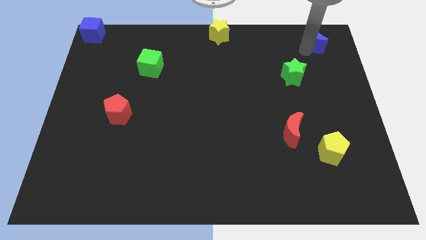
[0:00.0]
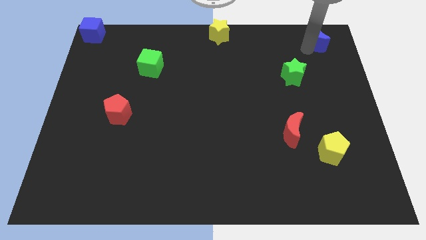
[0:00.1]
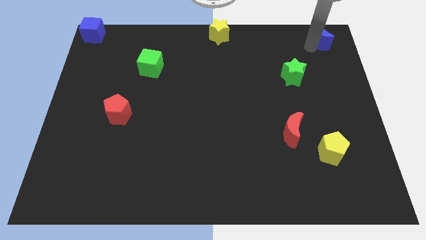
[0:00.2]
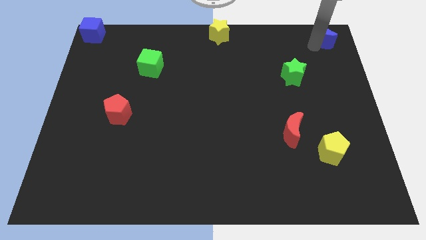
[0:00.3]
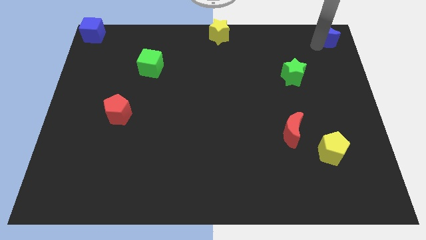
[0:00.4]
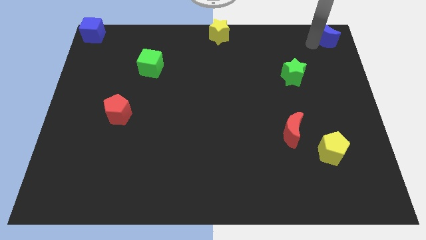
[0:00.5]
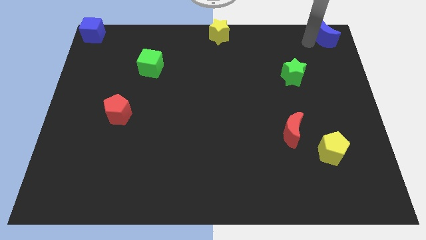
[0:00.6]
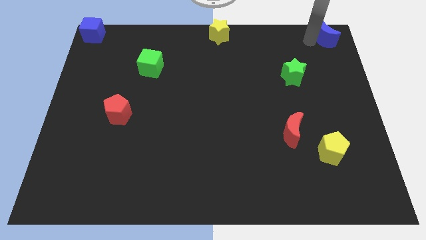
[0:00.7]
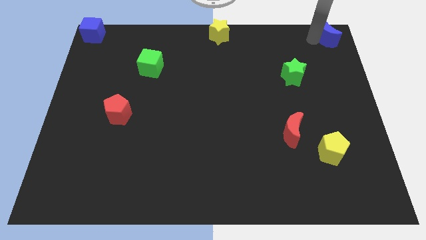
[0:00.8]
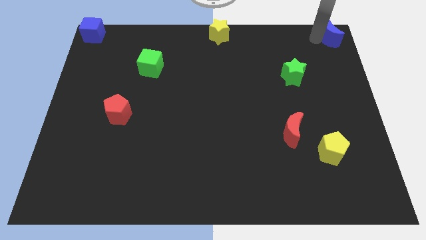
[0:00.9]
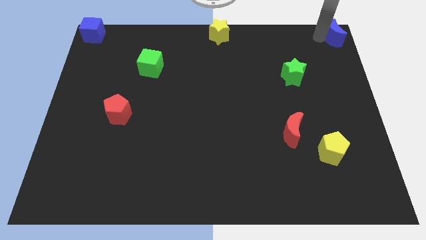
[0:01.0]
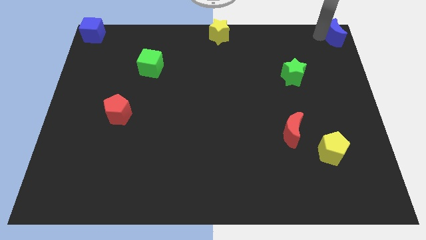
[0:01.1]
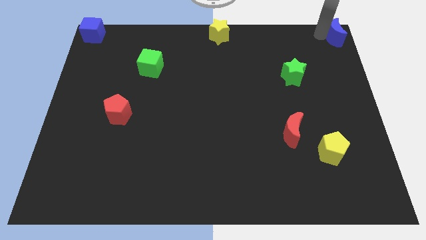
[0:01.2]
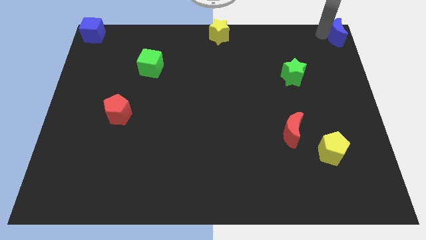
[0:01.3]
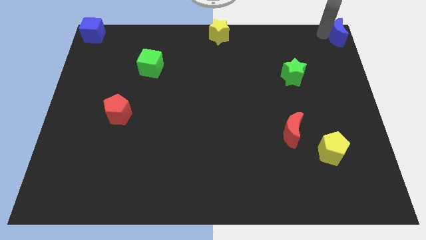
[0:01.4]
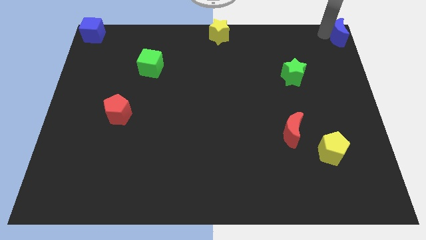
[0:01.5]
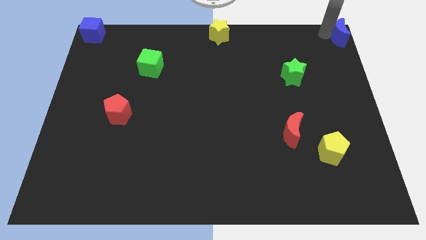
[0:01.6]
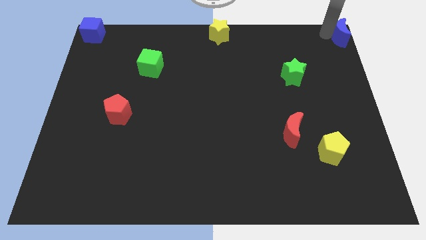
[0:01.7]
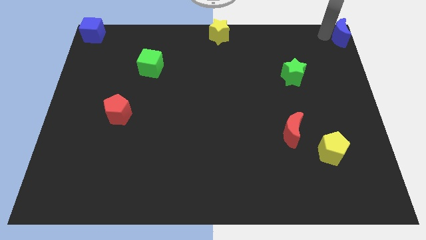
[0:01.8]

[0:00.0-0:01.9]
place the blue crescent at the top right corner of the board

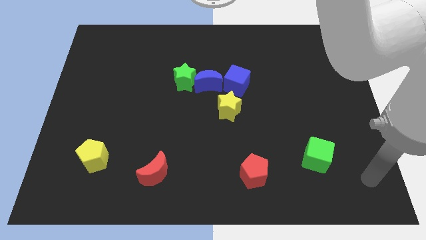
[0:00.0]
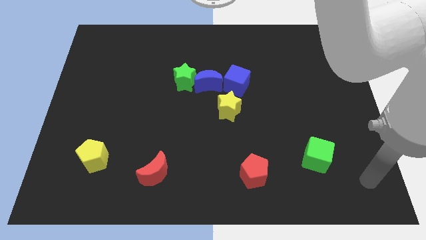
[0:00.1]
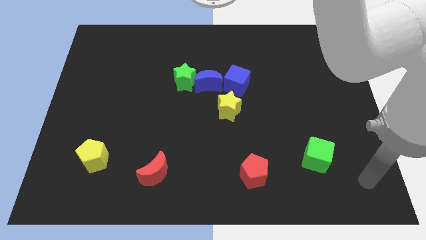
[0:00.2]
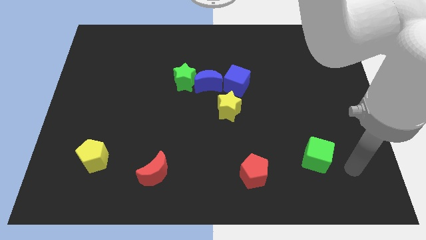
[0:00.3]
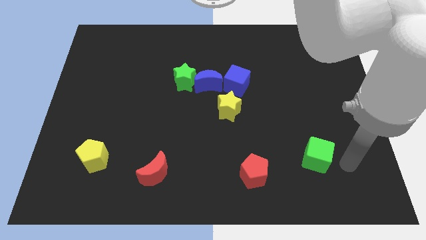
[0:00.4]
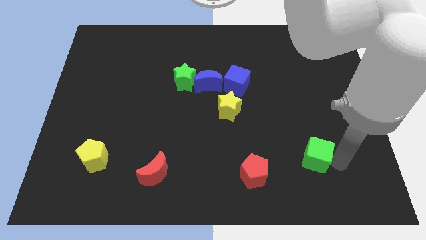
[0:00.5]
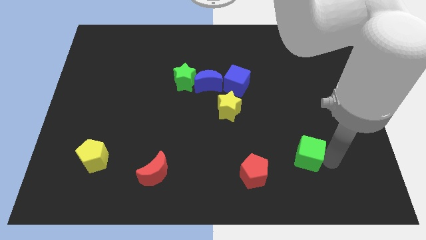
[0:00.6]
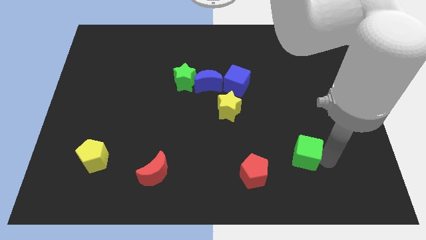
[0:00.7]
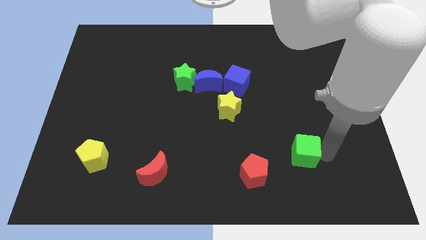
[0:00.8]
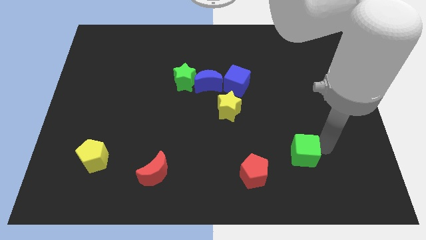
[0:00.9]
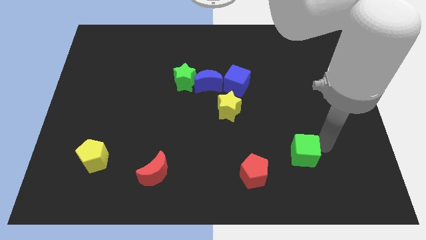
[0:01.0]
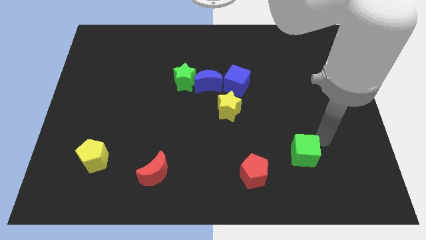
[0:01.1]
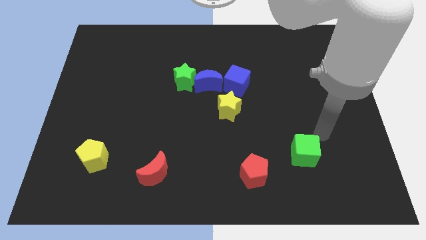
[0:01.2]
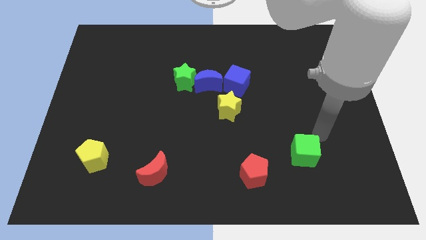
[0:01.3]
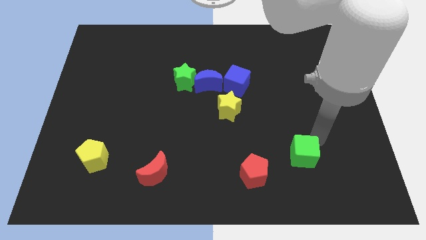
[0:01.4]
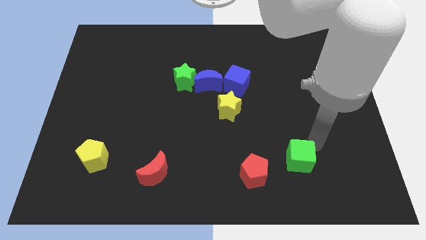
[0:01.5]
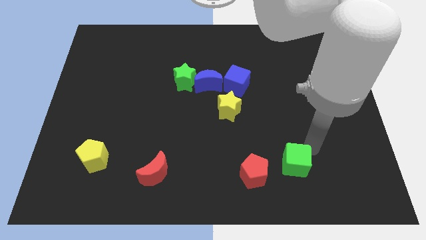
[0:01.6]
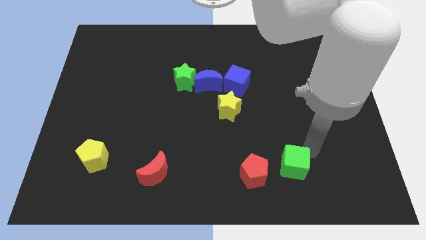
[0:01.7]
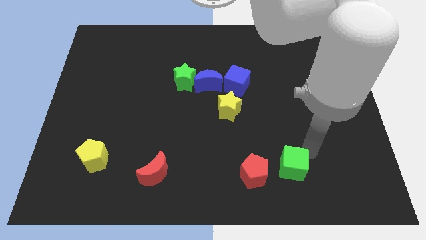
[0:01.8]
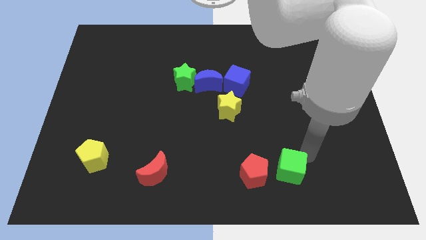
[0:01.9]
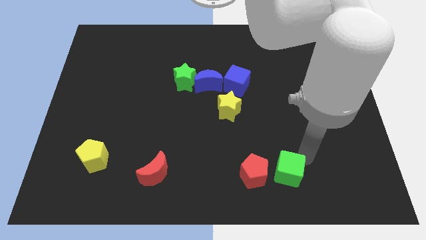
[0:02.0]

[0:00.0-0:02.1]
move the green cube to the right of red pentagon

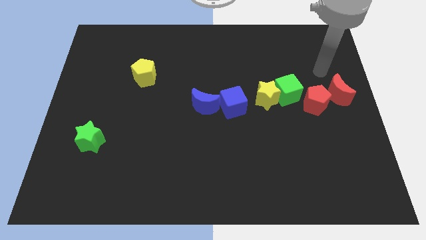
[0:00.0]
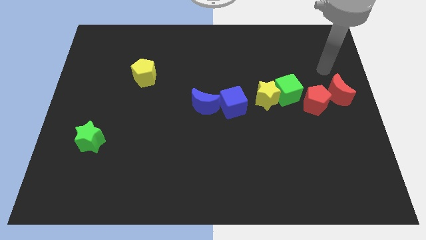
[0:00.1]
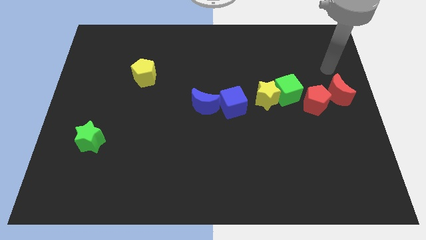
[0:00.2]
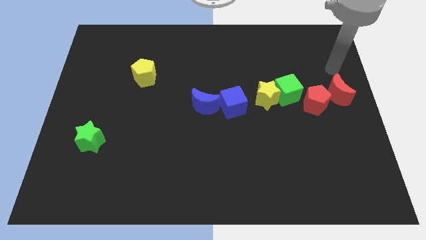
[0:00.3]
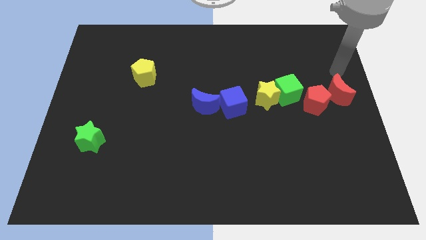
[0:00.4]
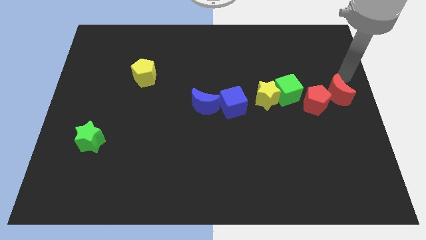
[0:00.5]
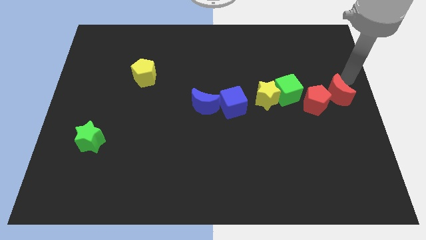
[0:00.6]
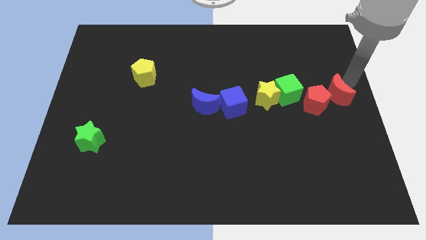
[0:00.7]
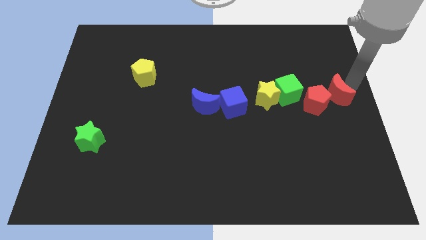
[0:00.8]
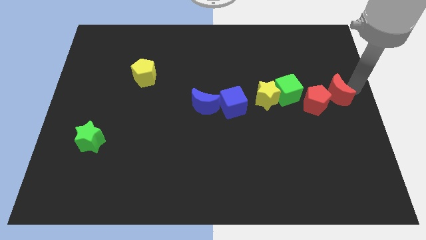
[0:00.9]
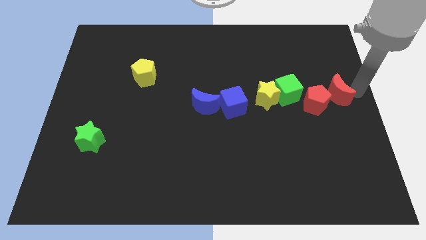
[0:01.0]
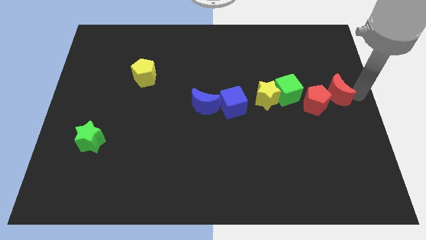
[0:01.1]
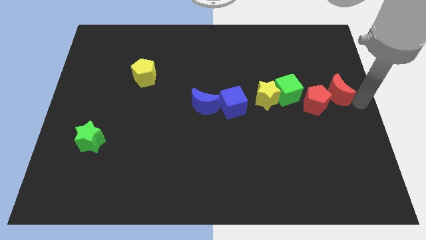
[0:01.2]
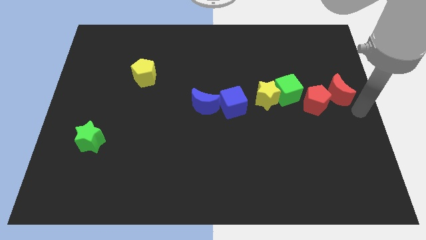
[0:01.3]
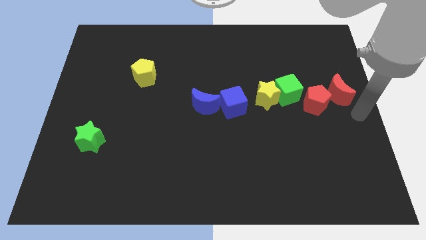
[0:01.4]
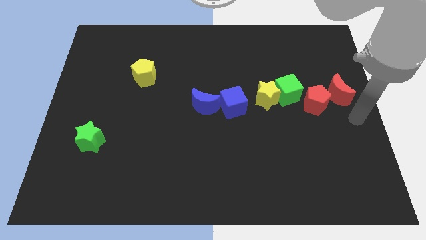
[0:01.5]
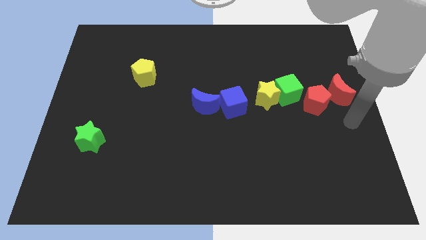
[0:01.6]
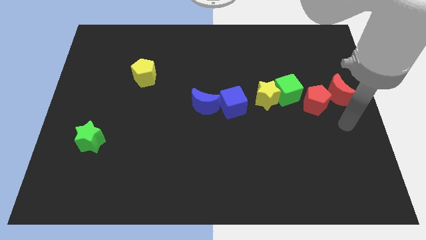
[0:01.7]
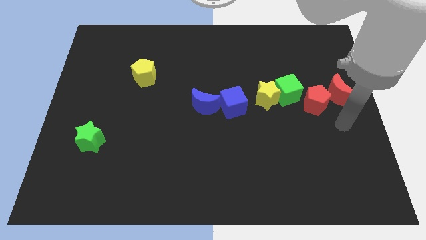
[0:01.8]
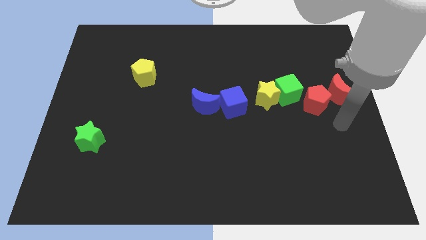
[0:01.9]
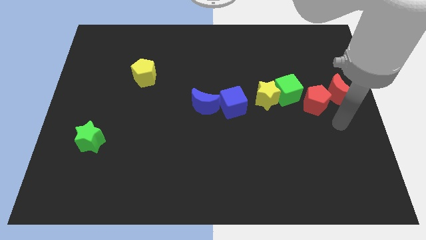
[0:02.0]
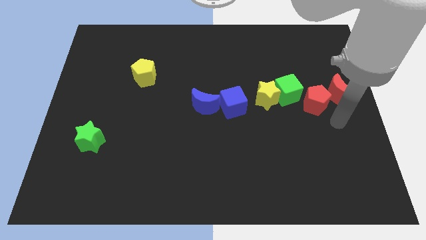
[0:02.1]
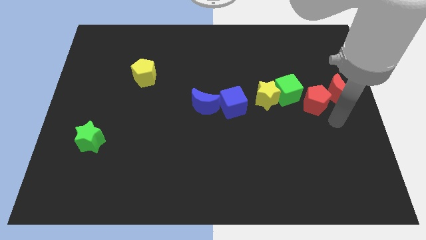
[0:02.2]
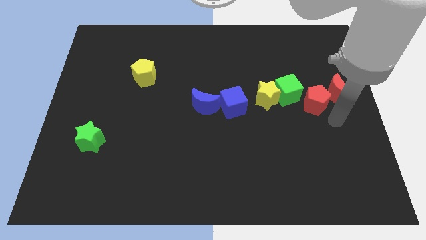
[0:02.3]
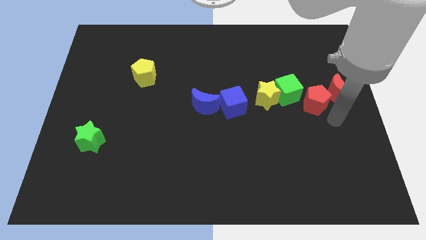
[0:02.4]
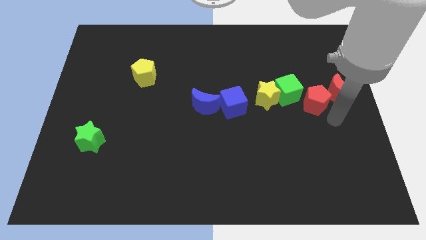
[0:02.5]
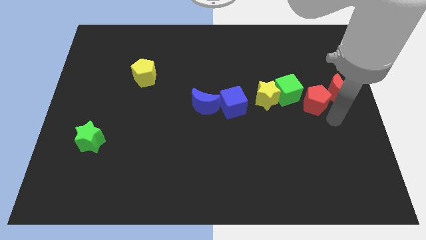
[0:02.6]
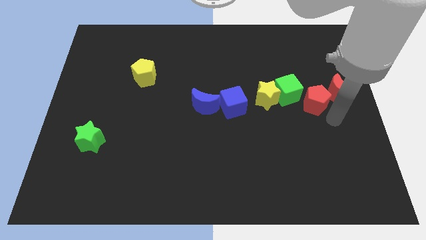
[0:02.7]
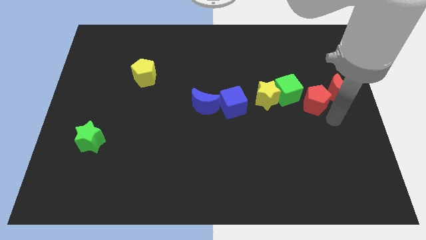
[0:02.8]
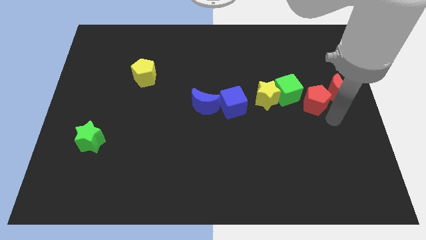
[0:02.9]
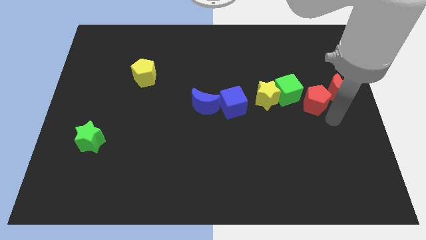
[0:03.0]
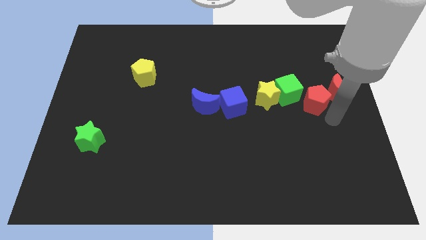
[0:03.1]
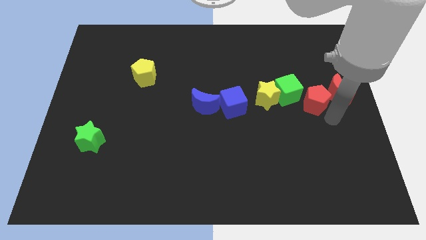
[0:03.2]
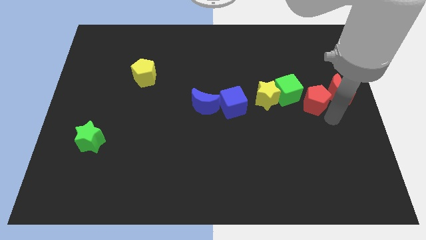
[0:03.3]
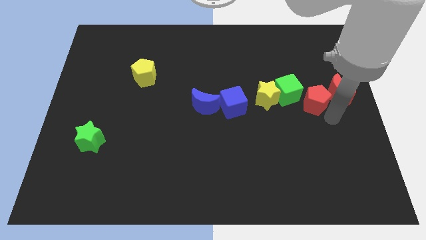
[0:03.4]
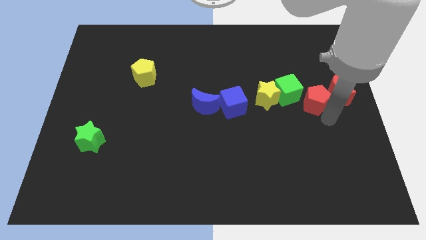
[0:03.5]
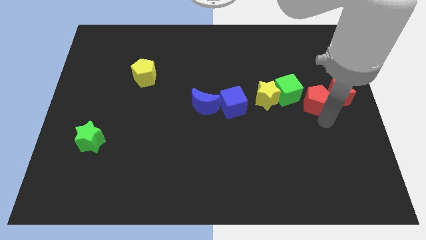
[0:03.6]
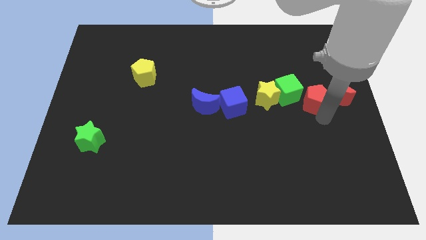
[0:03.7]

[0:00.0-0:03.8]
move your hand to the bottom of the red pentagon

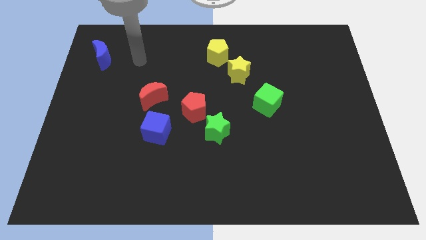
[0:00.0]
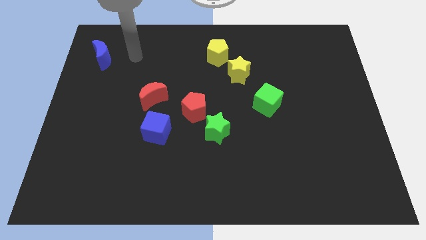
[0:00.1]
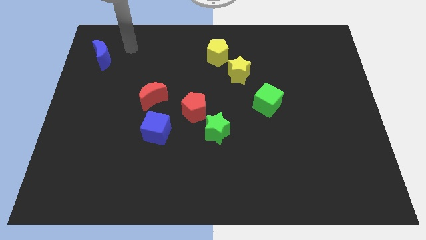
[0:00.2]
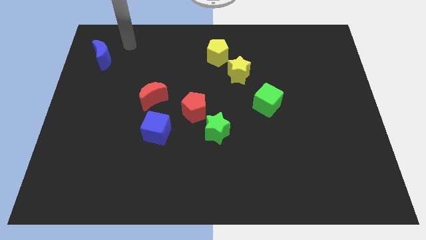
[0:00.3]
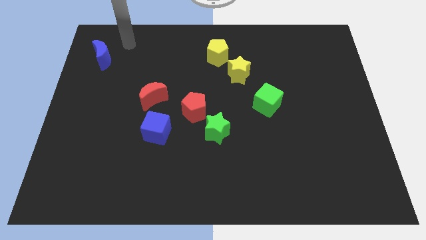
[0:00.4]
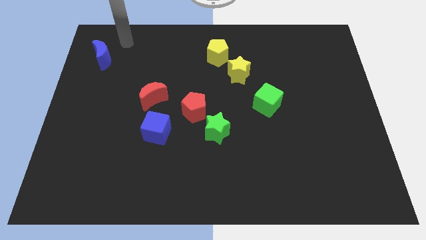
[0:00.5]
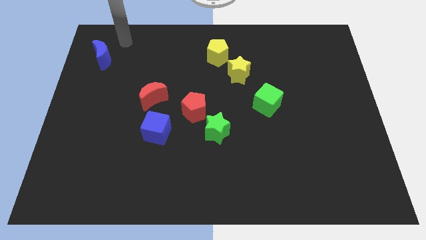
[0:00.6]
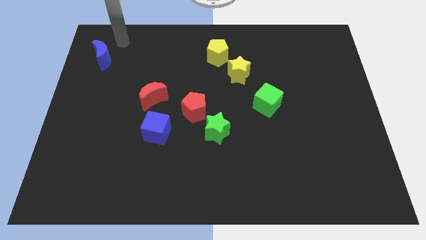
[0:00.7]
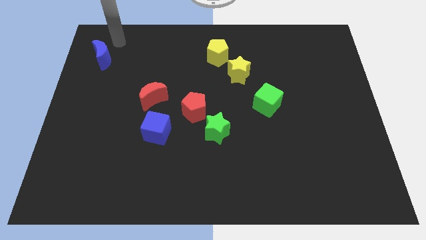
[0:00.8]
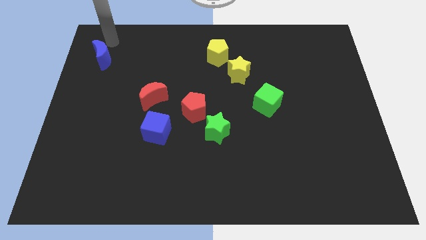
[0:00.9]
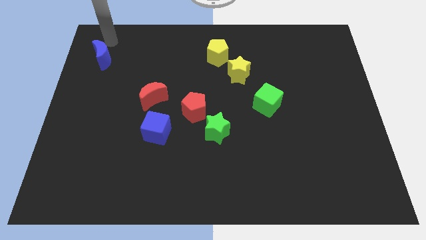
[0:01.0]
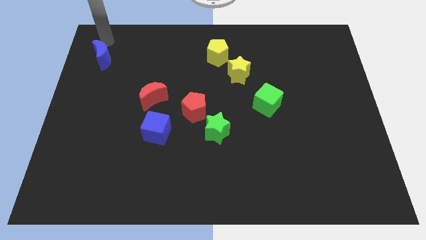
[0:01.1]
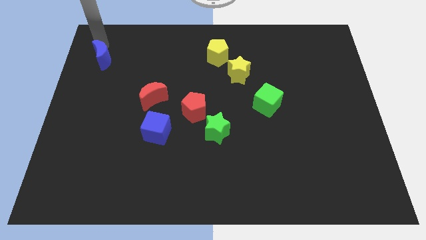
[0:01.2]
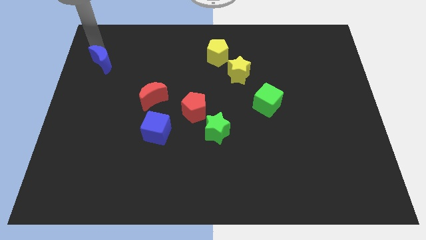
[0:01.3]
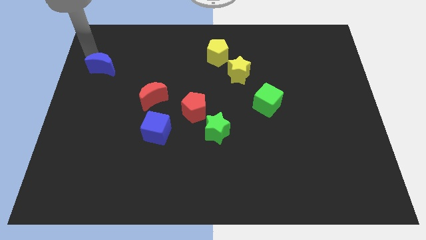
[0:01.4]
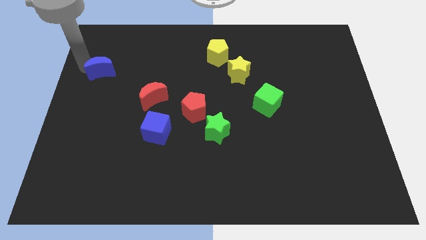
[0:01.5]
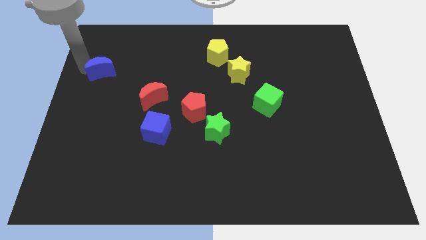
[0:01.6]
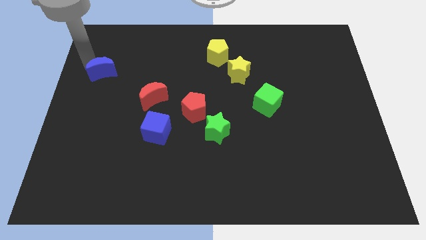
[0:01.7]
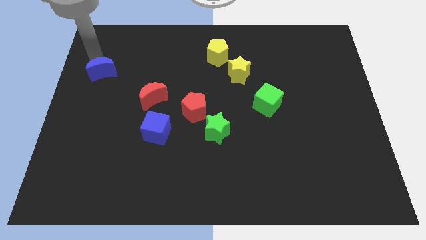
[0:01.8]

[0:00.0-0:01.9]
push the blue crescent towards the bottom side of the board
